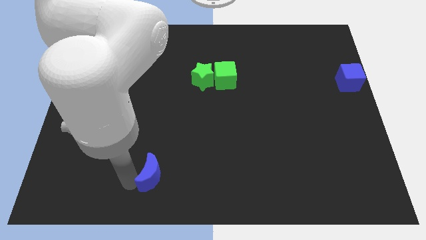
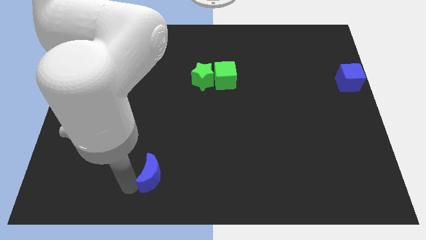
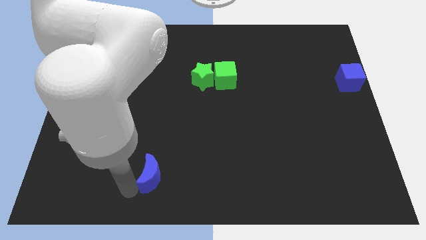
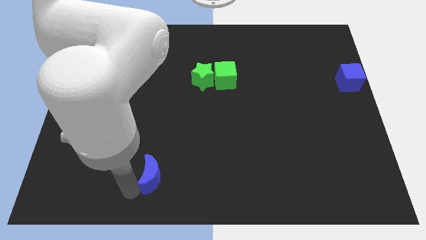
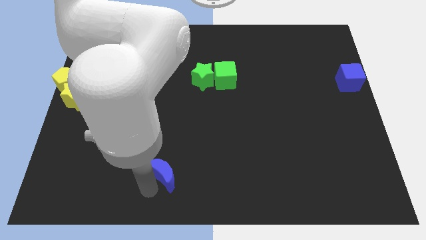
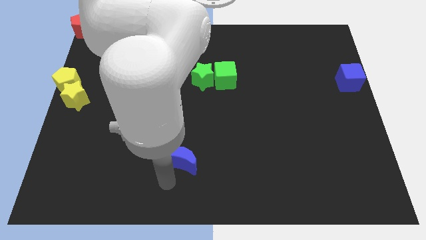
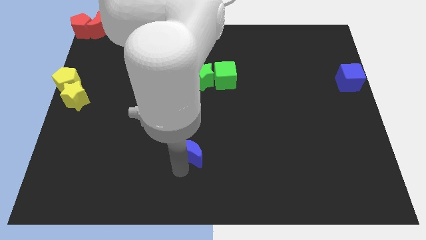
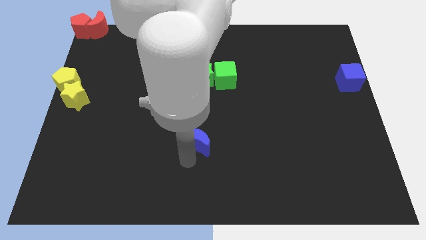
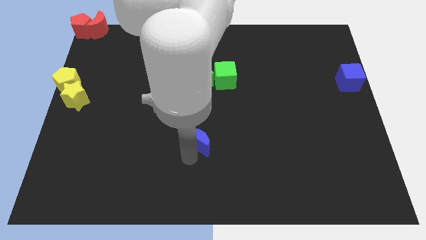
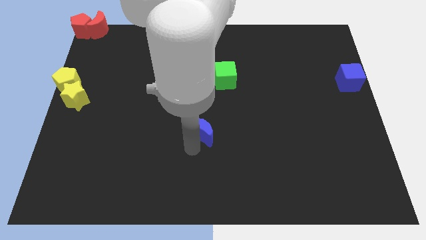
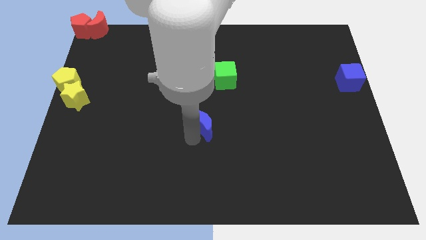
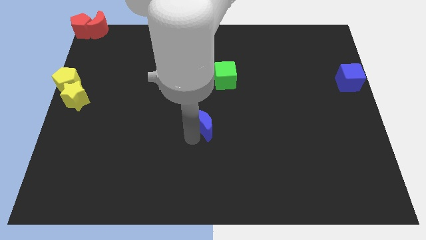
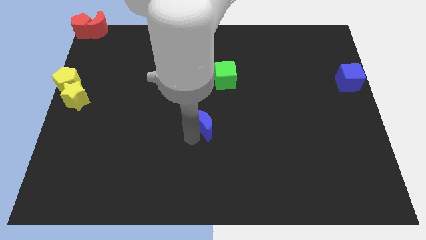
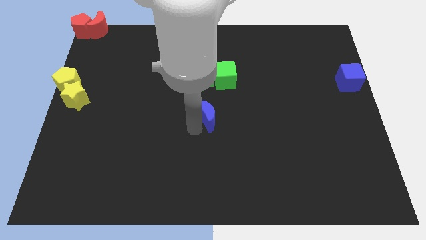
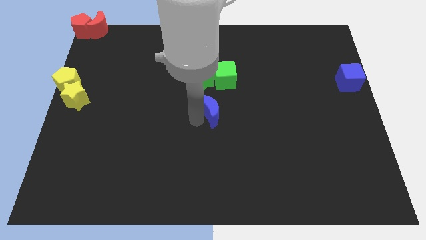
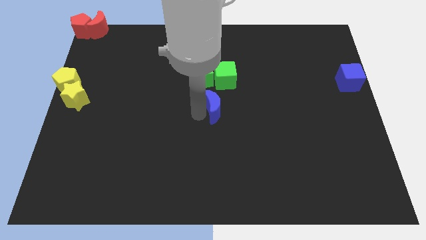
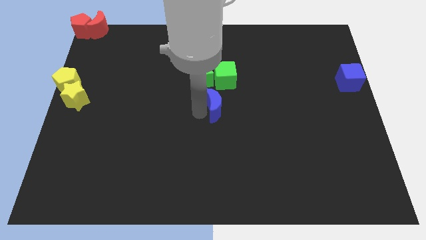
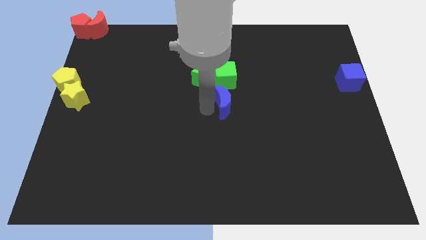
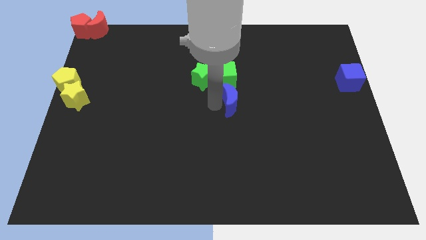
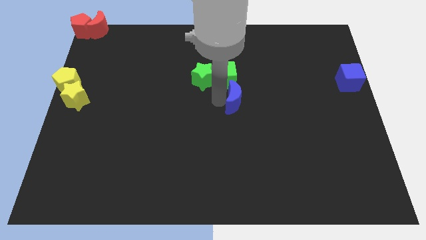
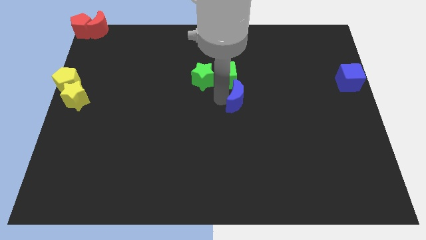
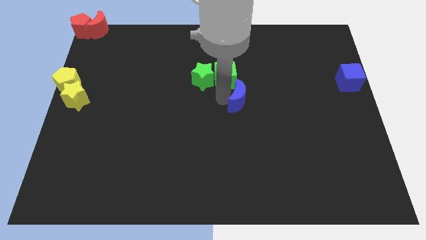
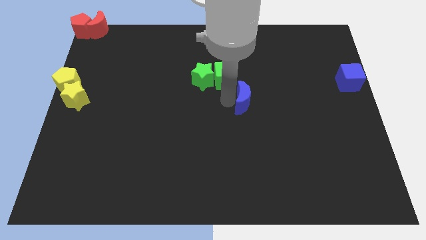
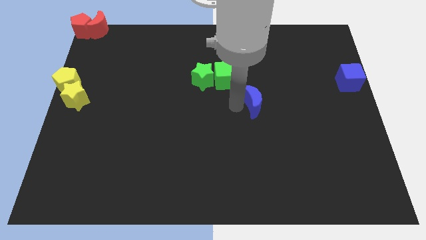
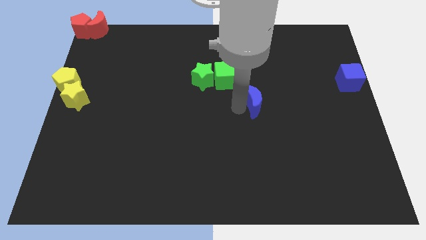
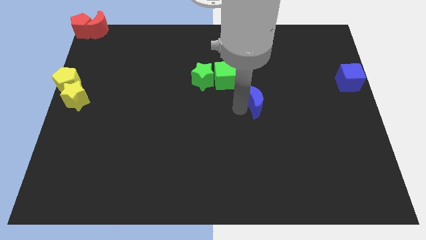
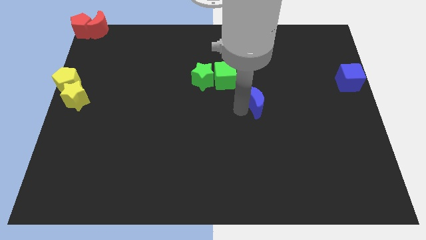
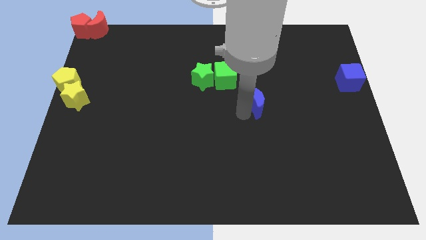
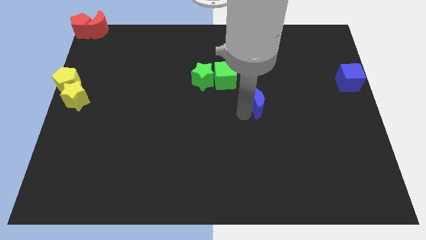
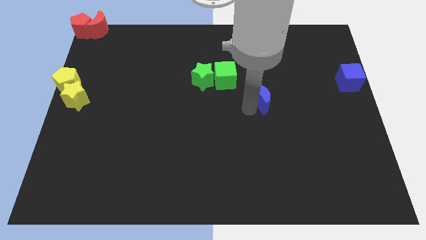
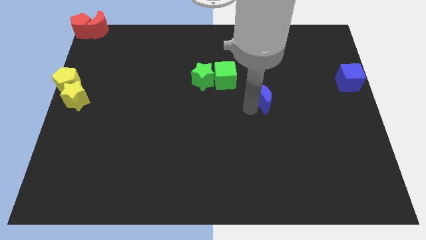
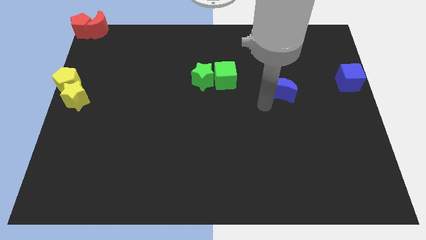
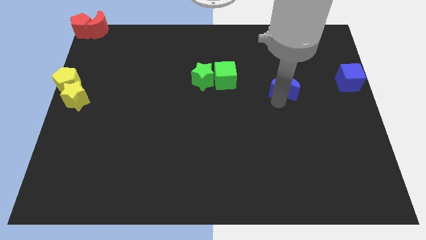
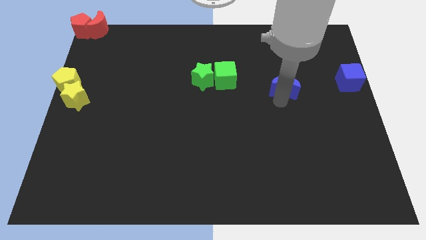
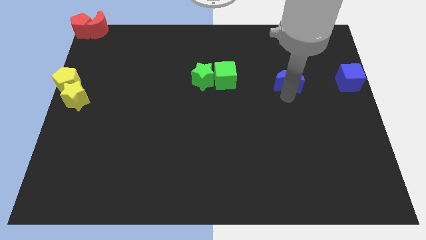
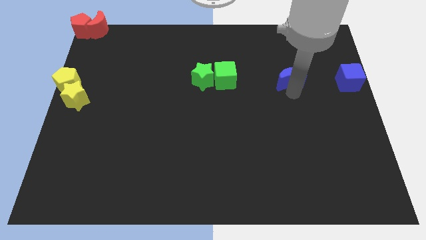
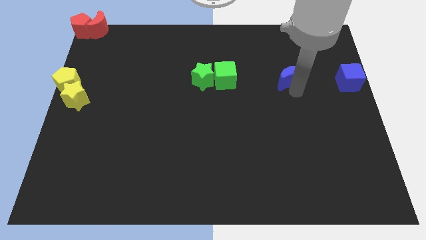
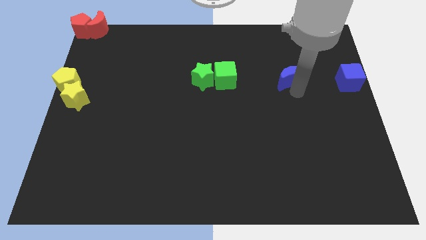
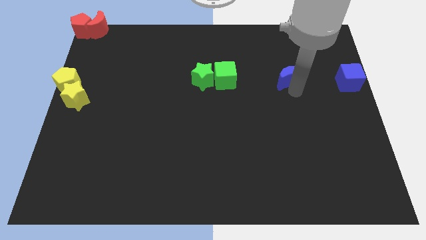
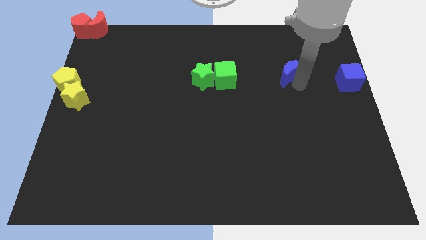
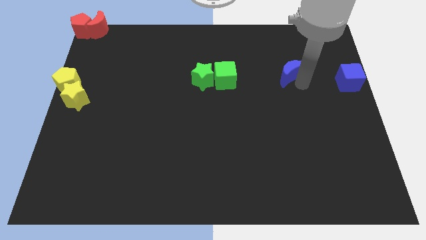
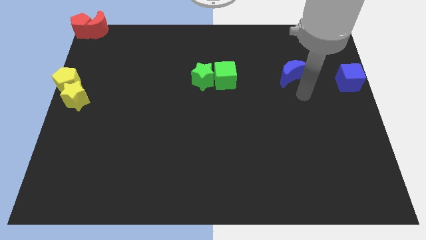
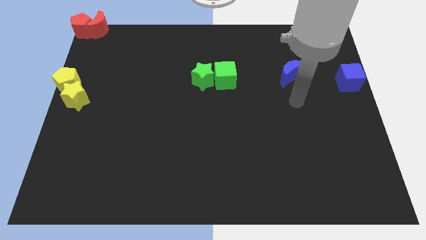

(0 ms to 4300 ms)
place the blue crescent to the left of the blue cube

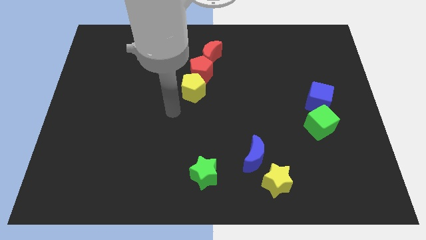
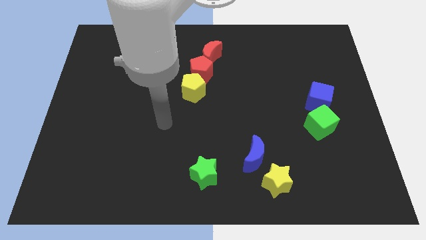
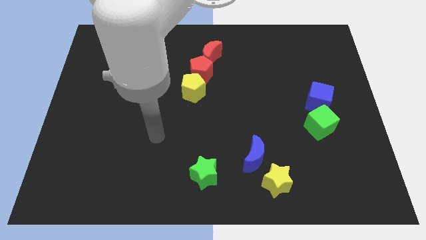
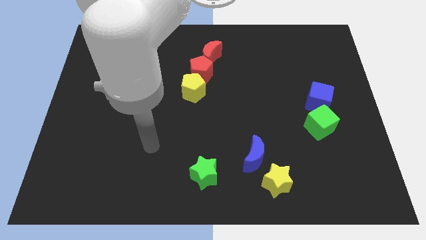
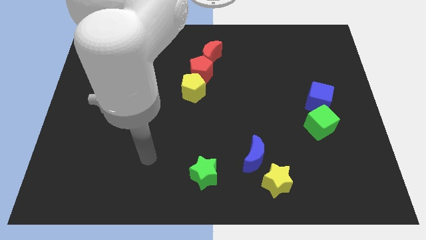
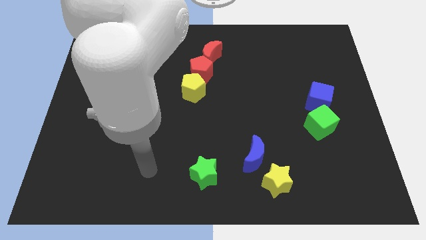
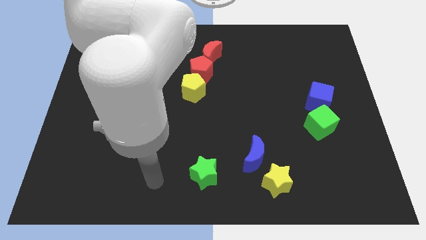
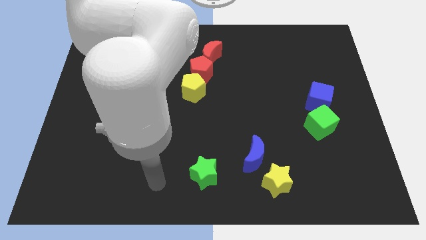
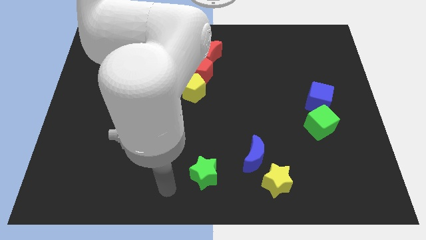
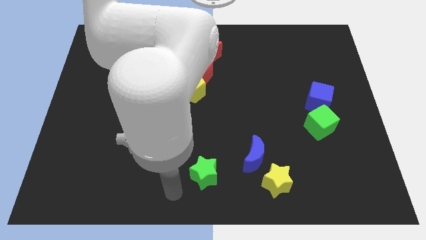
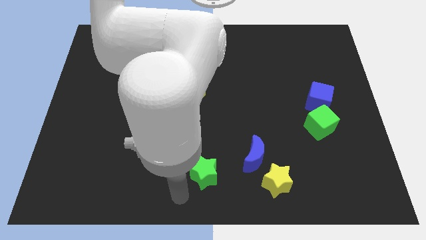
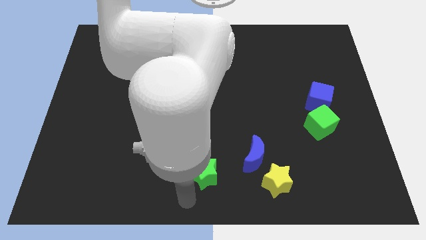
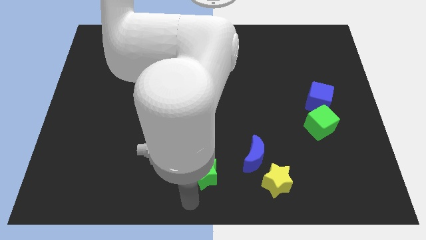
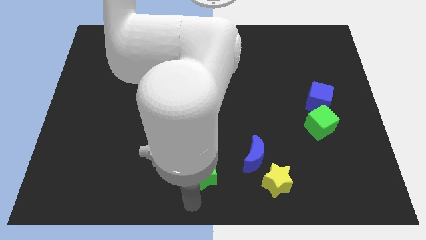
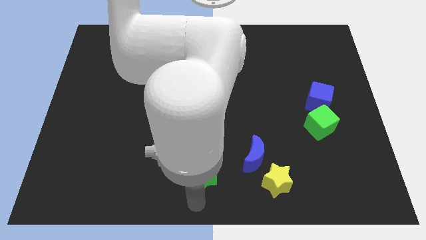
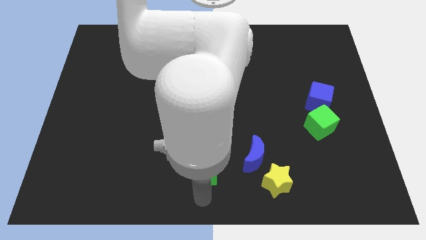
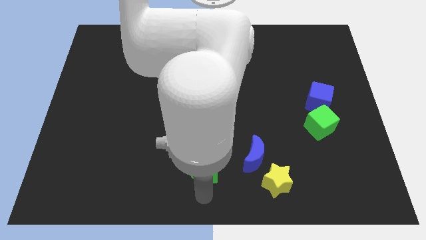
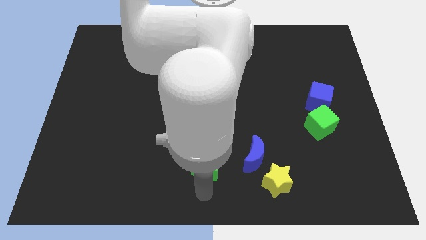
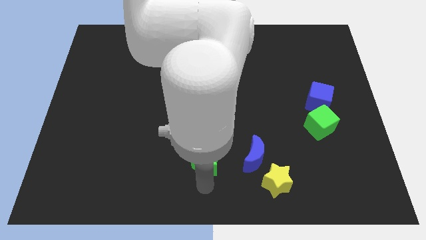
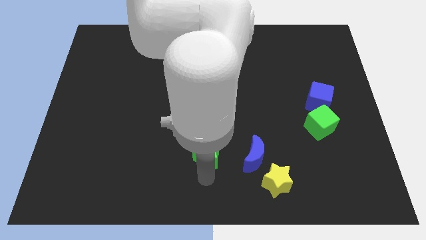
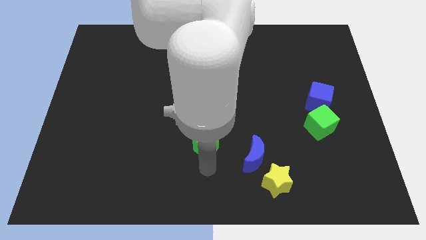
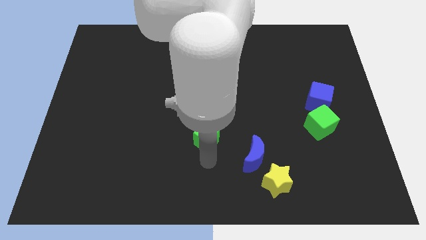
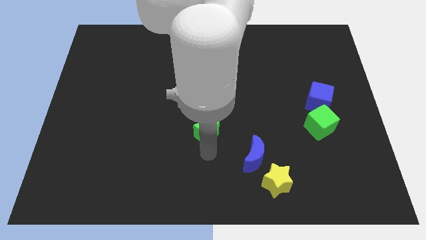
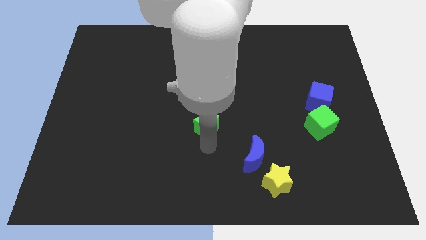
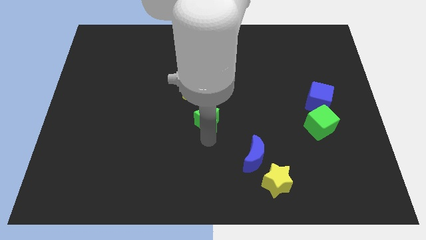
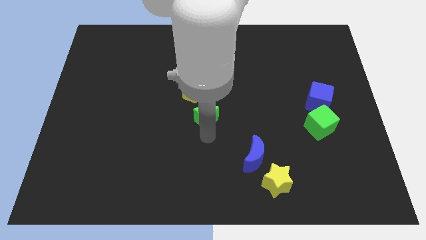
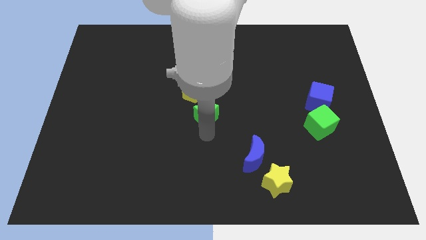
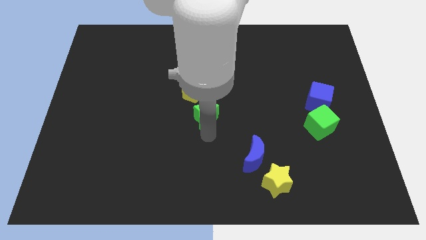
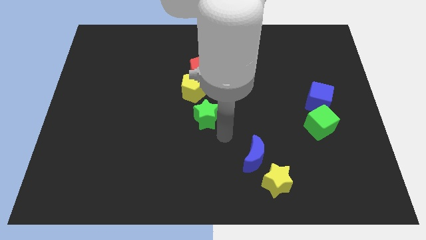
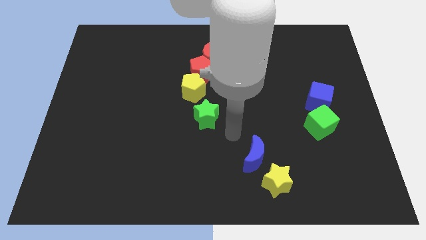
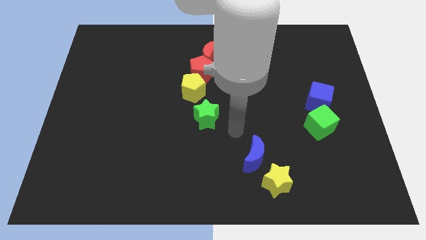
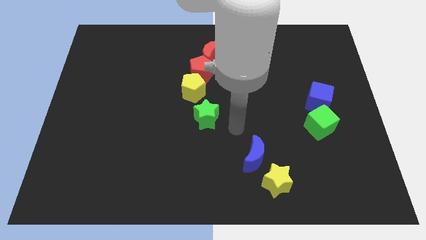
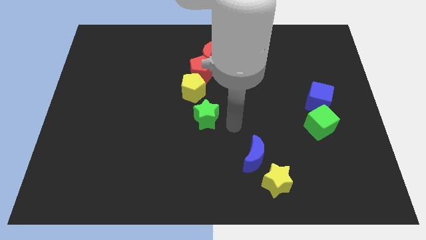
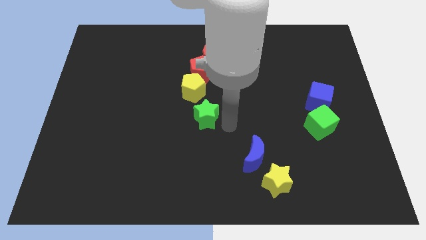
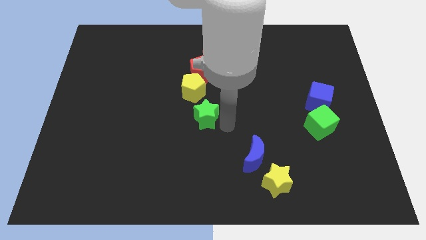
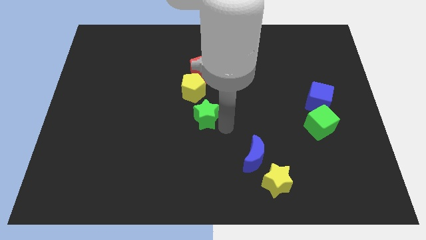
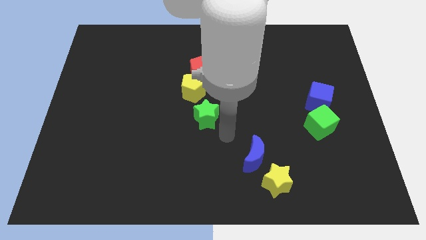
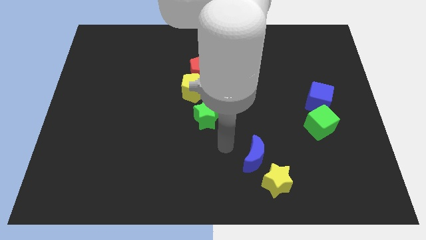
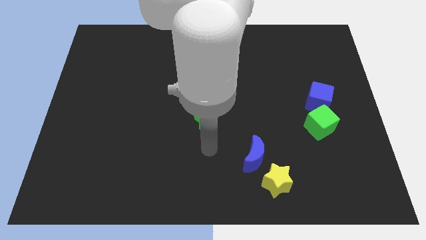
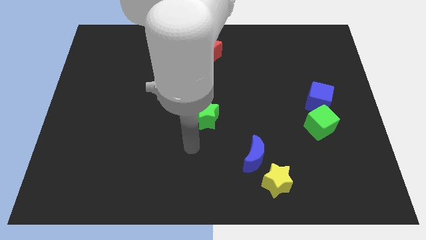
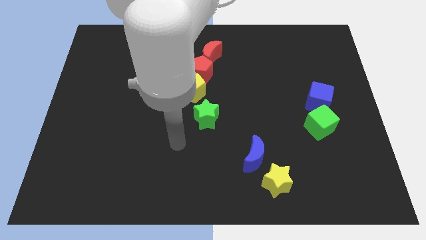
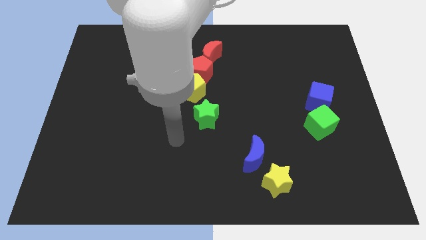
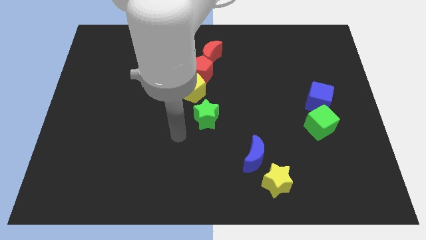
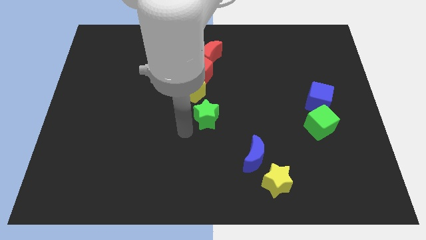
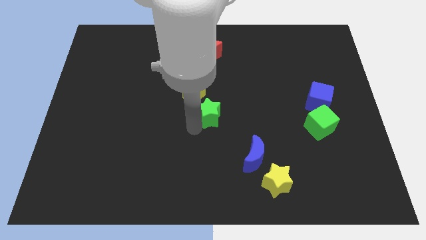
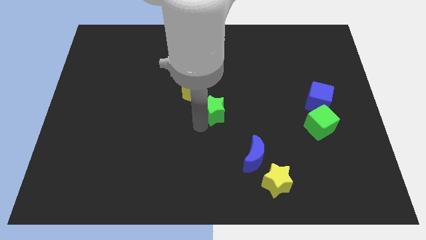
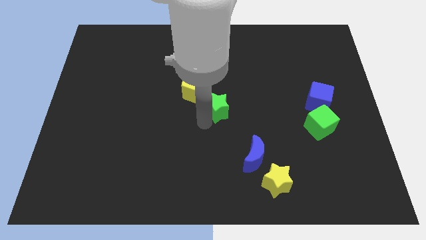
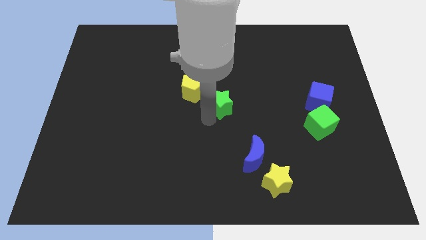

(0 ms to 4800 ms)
place the green star in between the yellow pentagon and blue moon

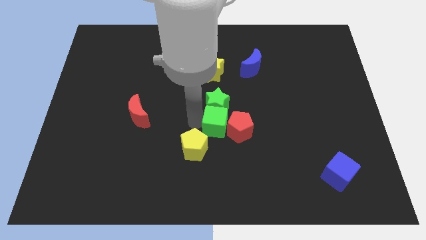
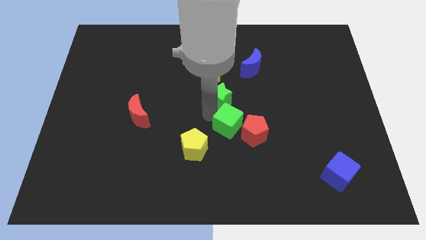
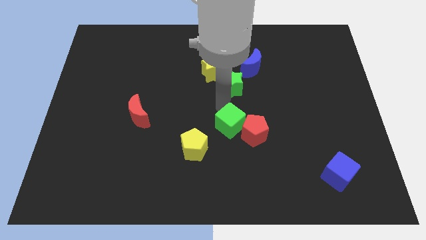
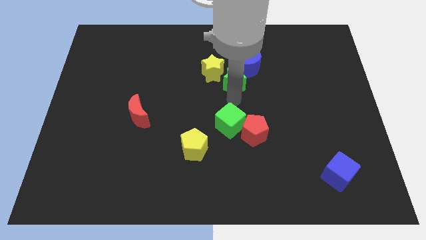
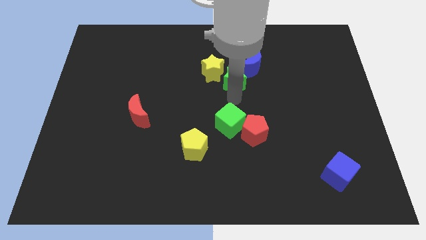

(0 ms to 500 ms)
place green star beside yellow star and blue leave request
